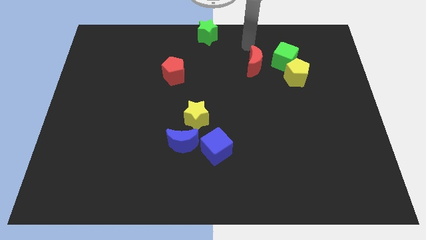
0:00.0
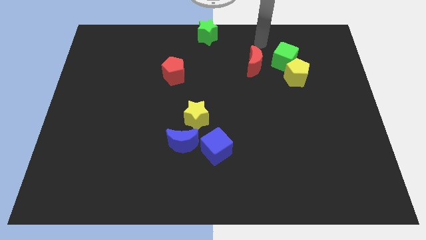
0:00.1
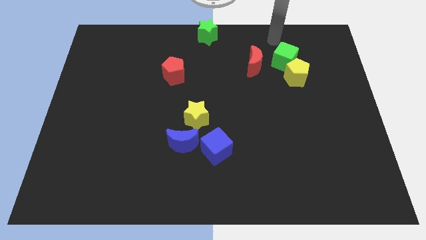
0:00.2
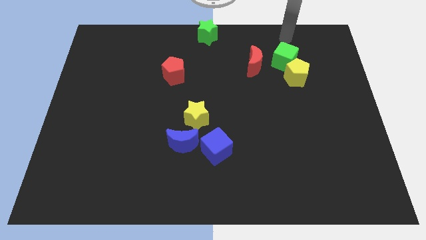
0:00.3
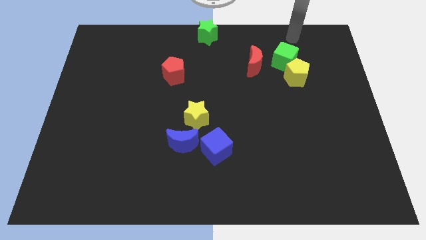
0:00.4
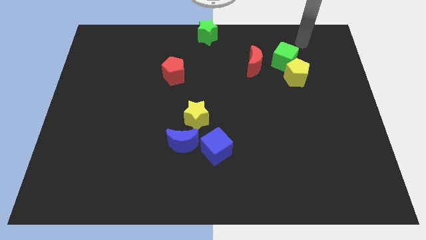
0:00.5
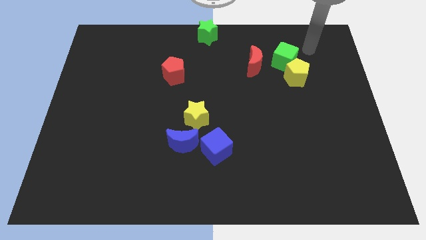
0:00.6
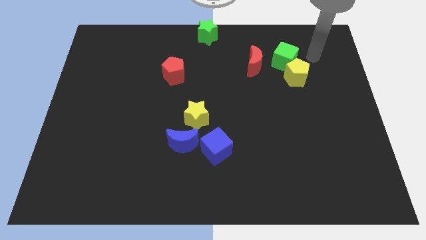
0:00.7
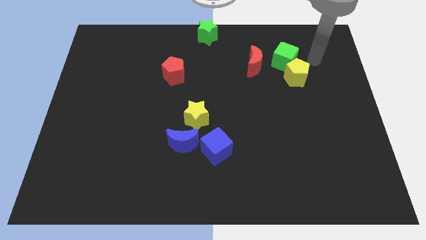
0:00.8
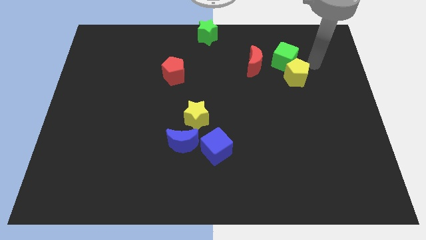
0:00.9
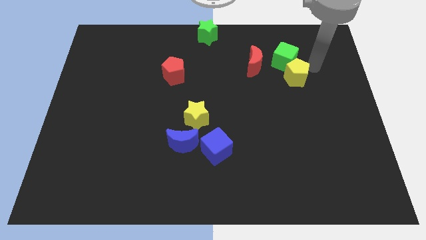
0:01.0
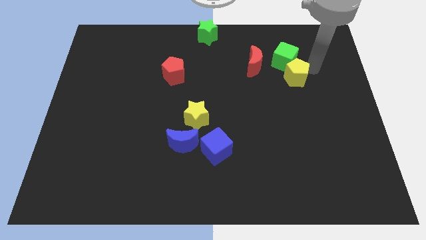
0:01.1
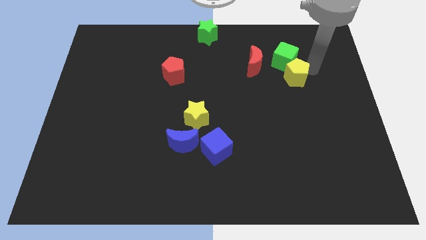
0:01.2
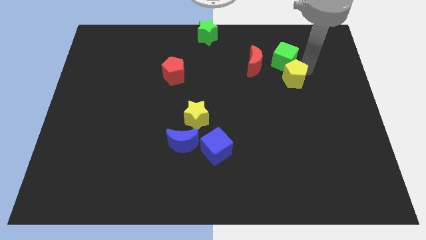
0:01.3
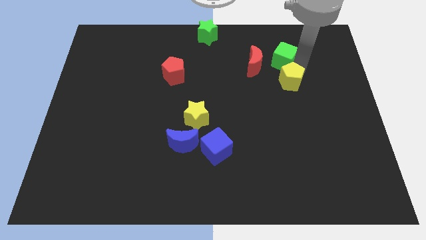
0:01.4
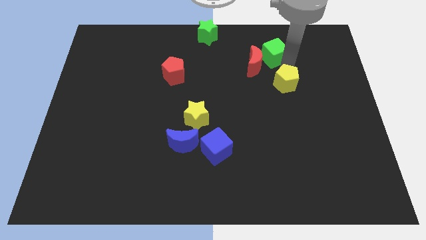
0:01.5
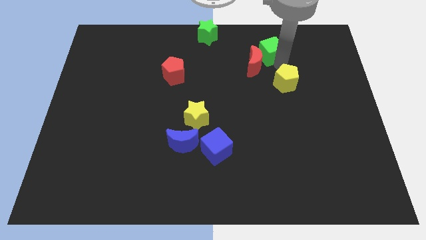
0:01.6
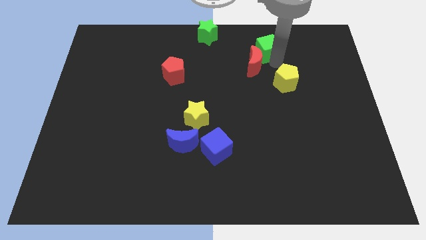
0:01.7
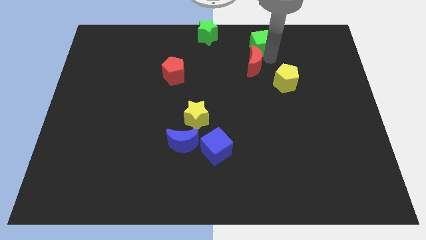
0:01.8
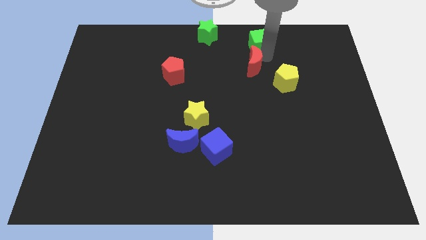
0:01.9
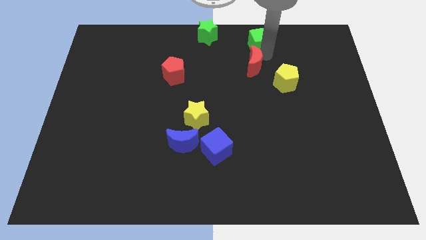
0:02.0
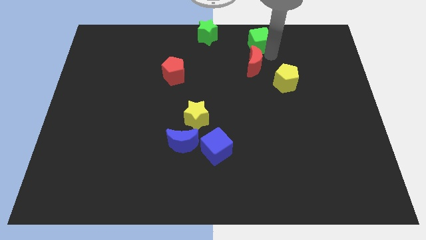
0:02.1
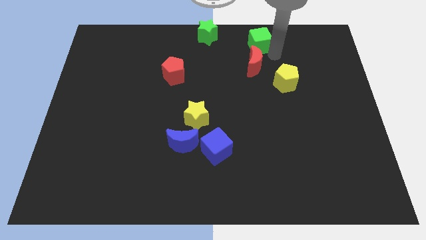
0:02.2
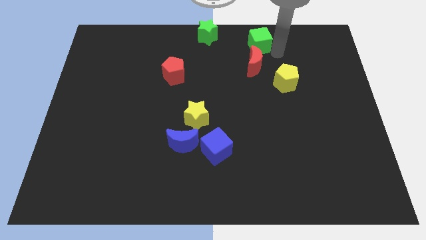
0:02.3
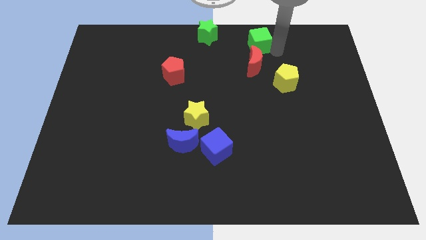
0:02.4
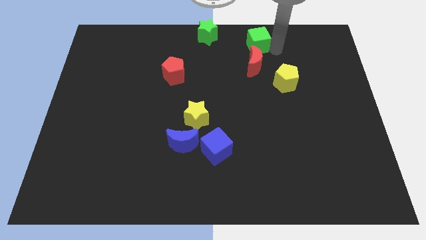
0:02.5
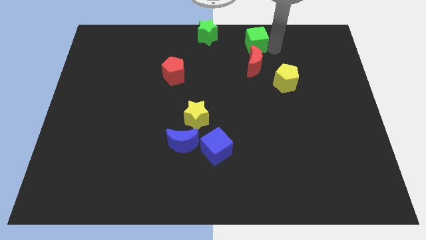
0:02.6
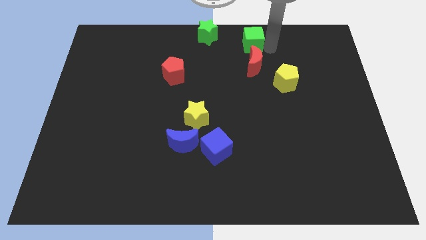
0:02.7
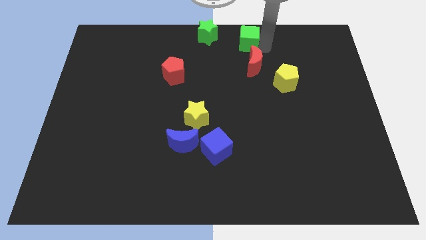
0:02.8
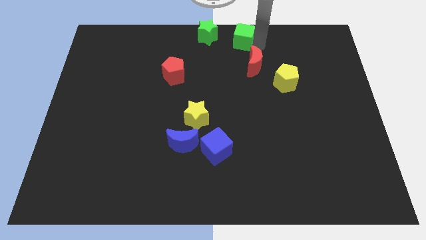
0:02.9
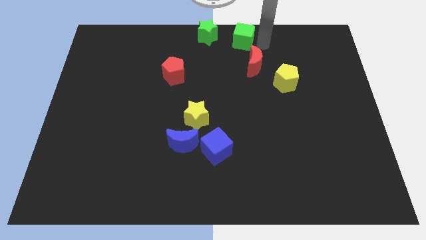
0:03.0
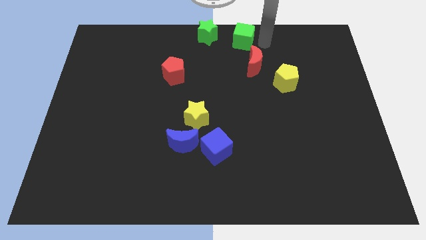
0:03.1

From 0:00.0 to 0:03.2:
move the green cube towards green star

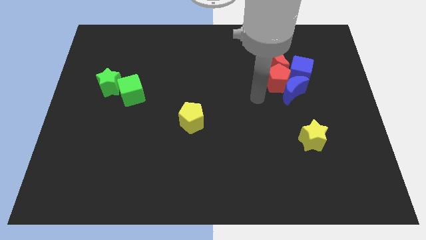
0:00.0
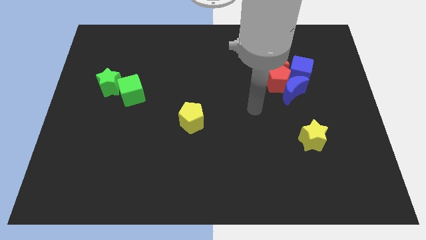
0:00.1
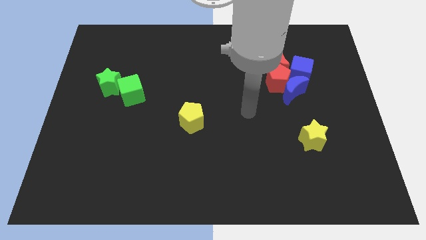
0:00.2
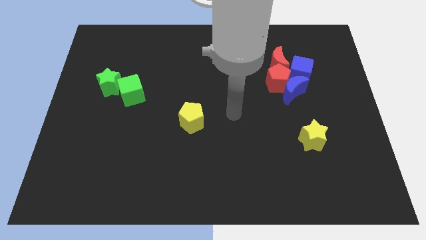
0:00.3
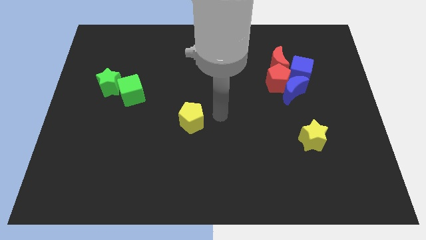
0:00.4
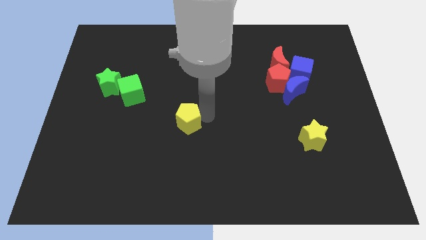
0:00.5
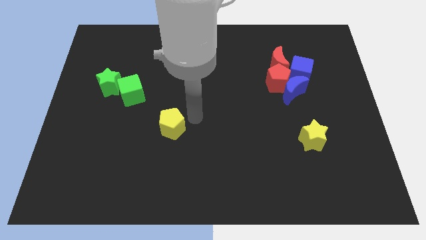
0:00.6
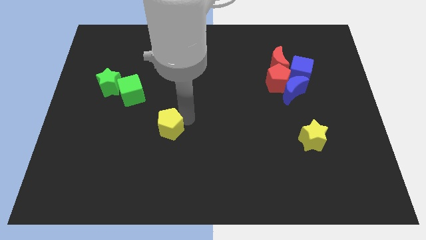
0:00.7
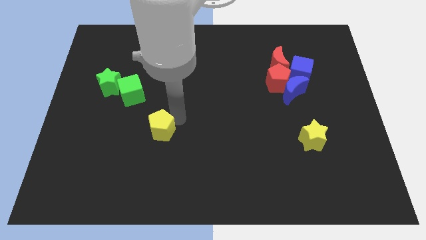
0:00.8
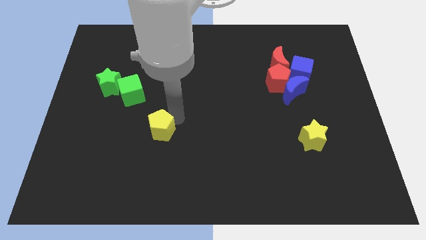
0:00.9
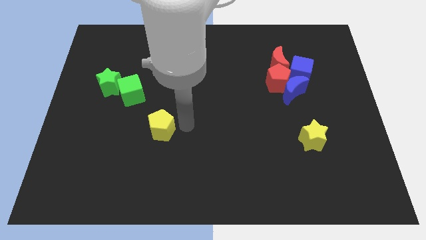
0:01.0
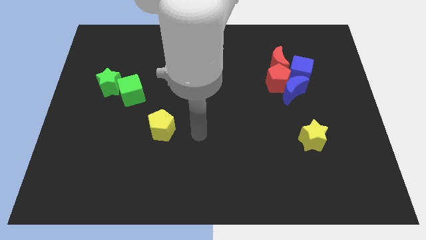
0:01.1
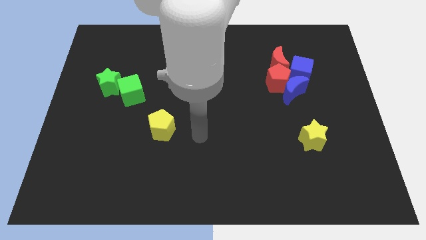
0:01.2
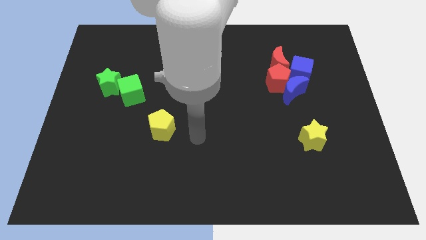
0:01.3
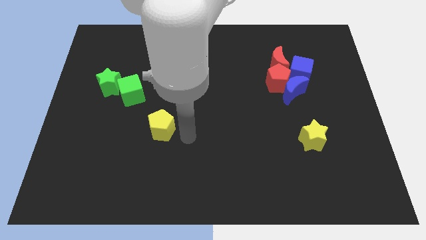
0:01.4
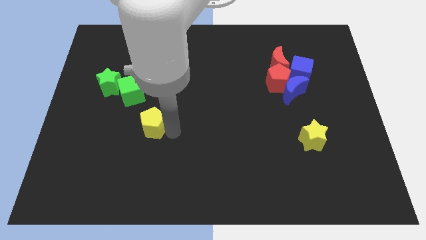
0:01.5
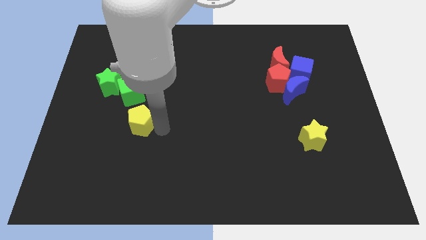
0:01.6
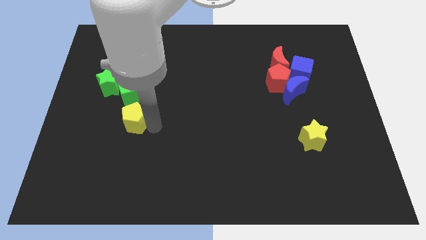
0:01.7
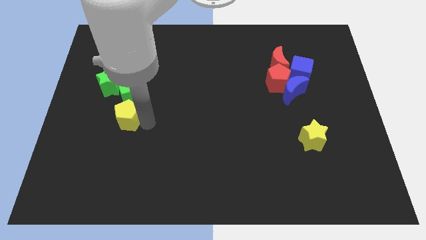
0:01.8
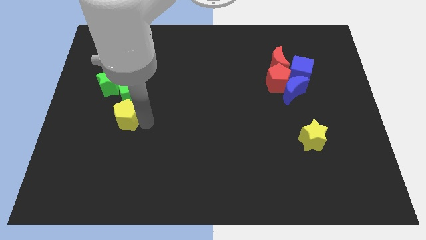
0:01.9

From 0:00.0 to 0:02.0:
move the yellow pentagon to the bottom of the green cube

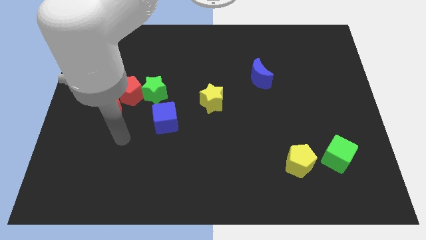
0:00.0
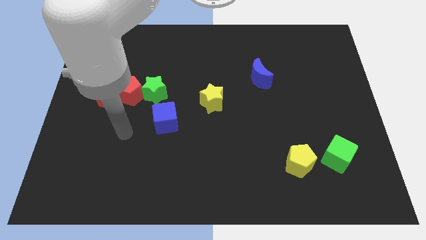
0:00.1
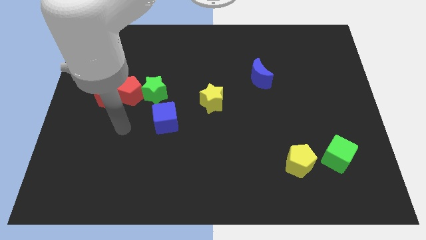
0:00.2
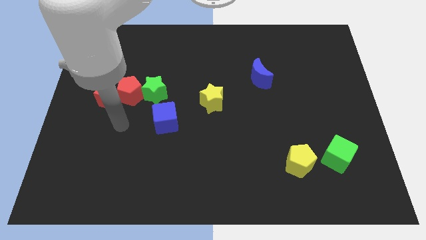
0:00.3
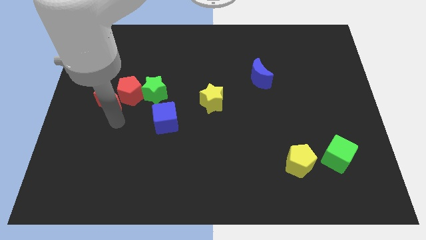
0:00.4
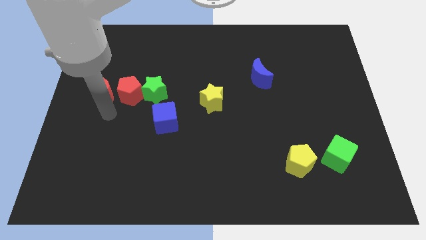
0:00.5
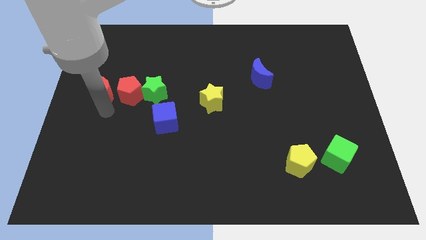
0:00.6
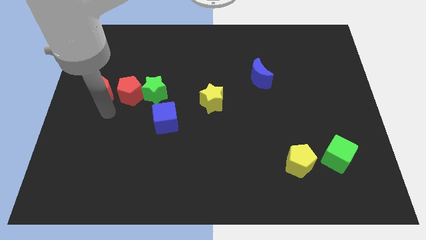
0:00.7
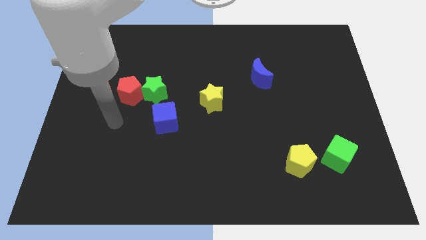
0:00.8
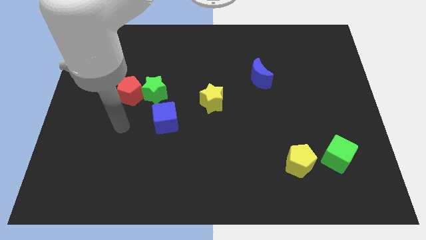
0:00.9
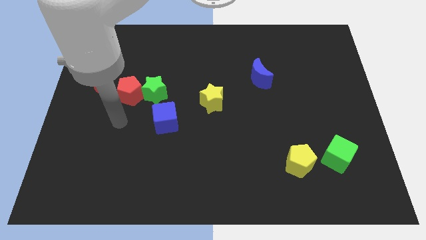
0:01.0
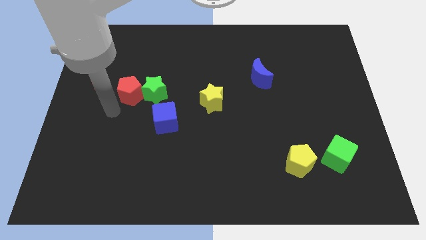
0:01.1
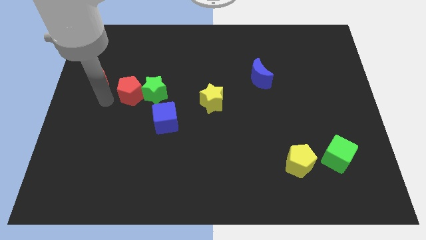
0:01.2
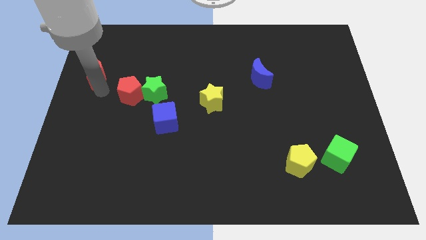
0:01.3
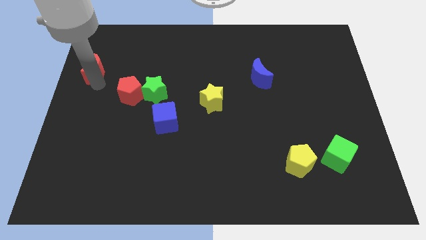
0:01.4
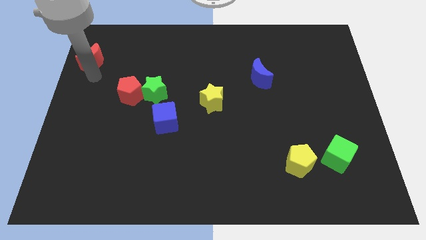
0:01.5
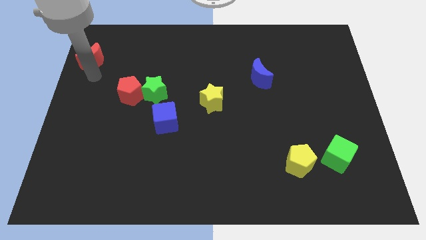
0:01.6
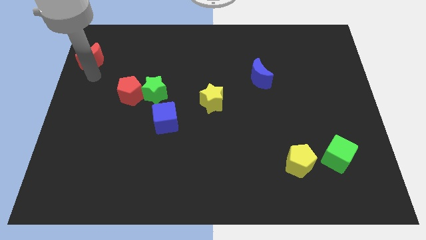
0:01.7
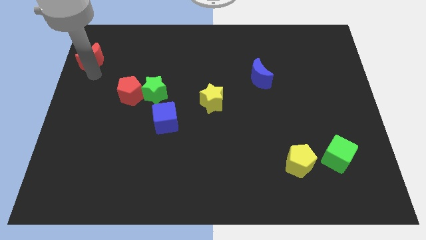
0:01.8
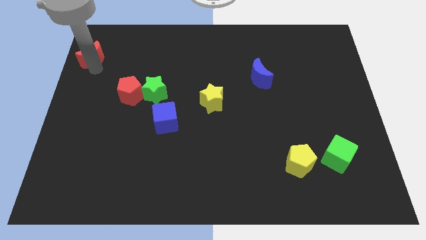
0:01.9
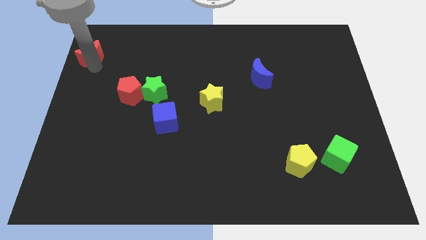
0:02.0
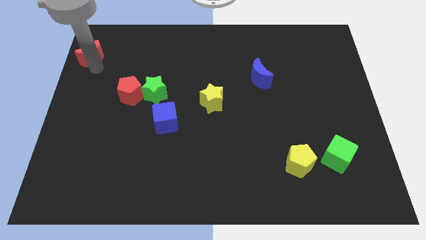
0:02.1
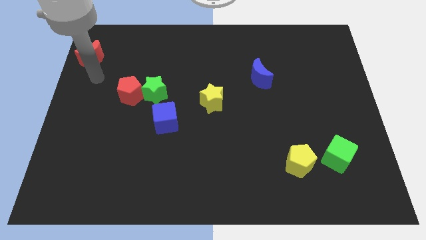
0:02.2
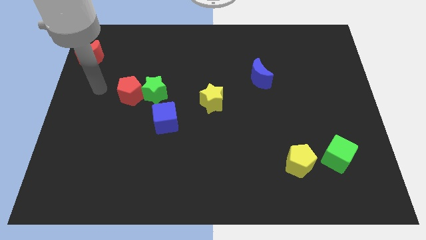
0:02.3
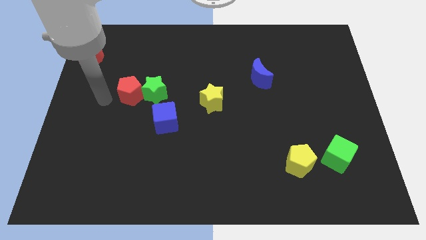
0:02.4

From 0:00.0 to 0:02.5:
place red crescent on left top of the board

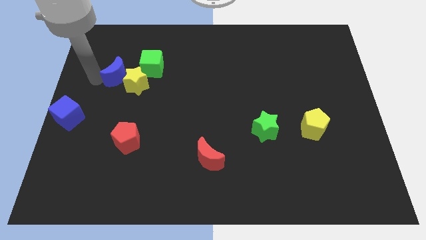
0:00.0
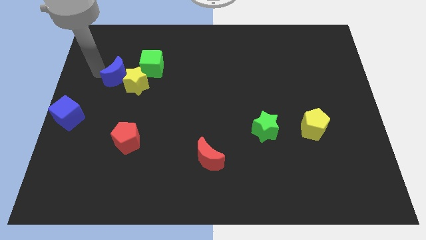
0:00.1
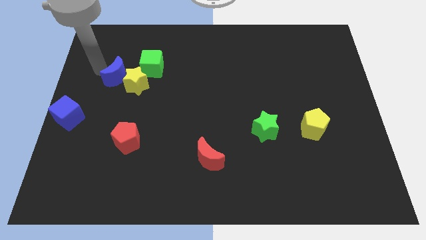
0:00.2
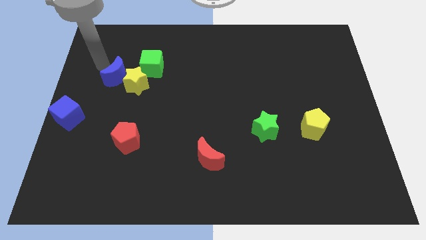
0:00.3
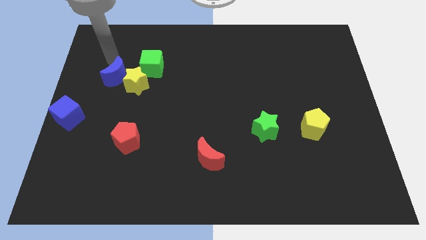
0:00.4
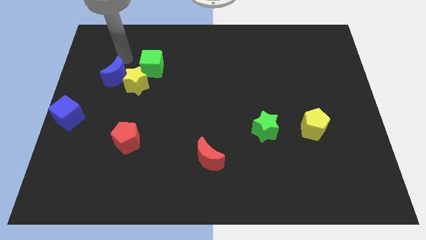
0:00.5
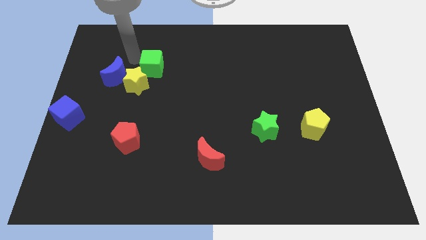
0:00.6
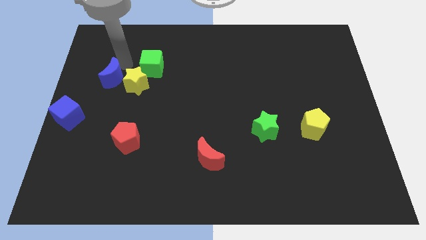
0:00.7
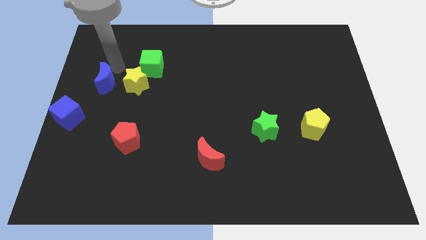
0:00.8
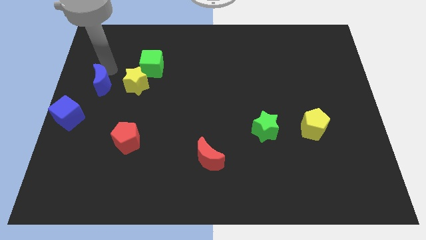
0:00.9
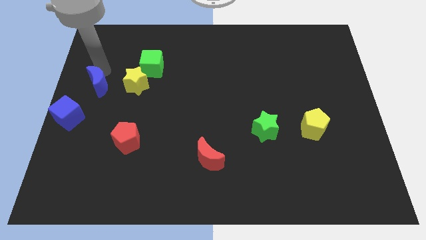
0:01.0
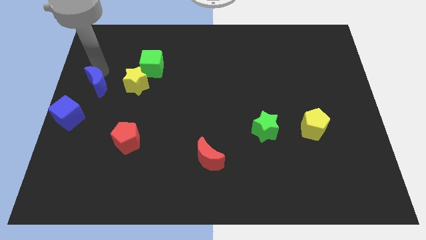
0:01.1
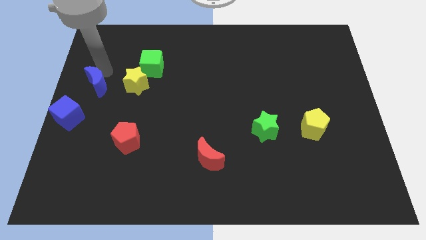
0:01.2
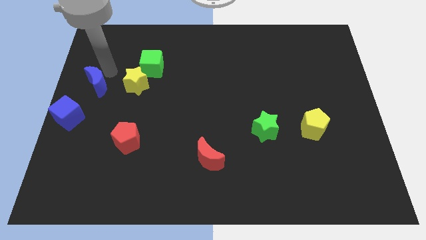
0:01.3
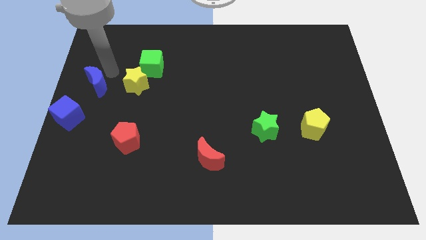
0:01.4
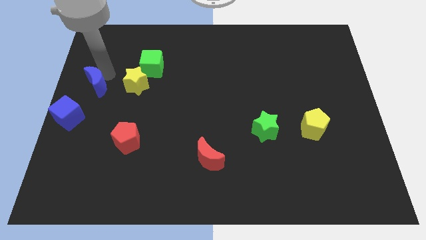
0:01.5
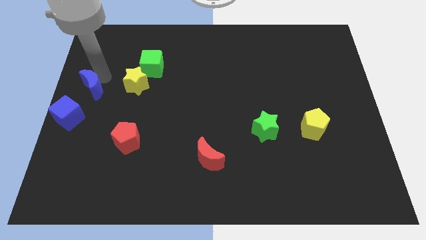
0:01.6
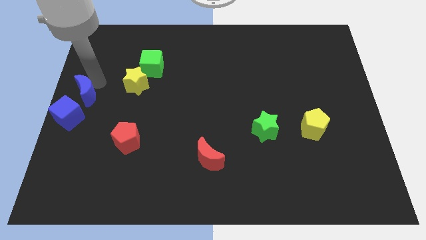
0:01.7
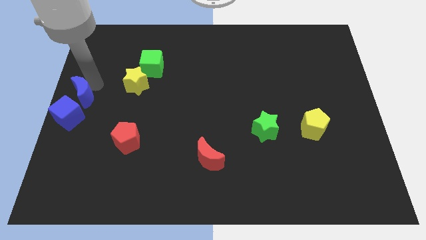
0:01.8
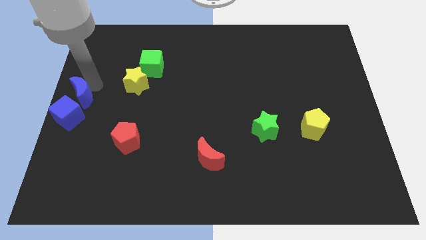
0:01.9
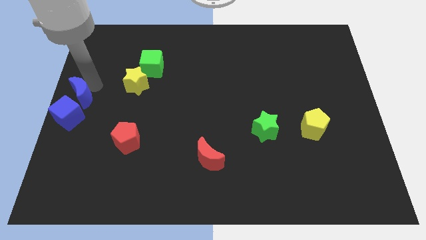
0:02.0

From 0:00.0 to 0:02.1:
move blue moon close to blue cube
